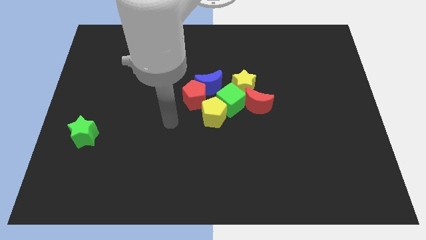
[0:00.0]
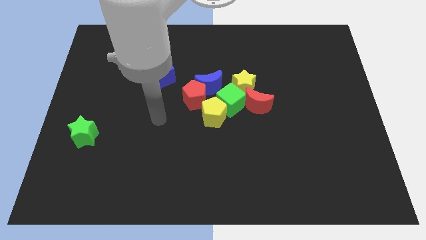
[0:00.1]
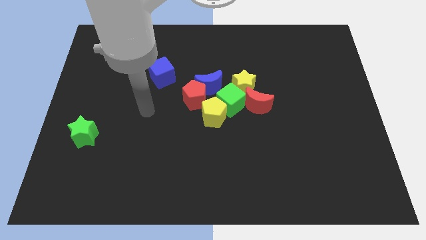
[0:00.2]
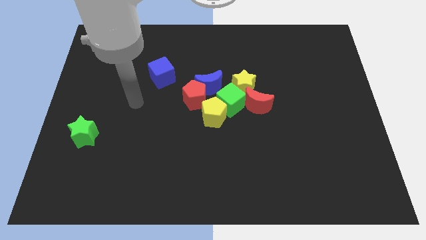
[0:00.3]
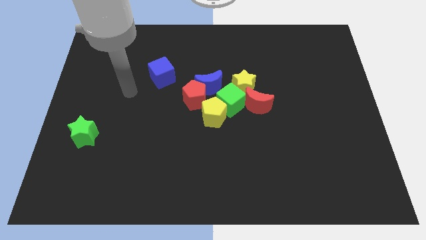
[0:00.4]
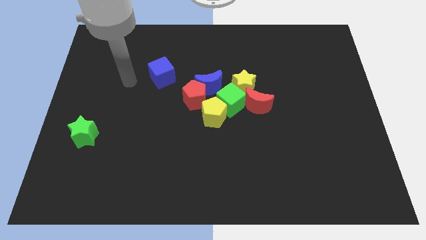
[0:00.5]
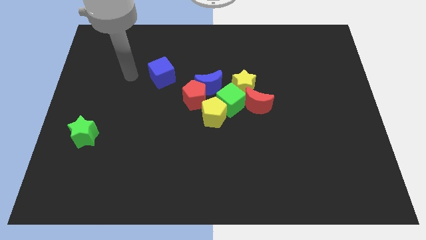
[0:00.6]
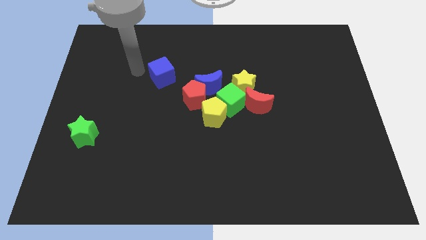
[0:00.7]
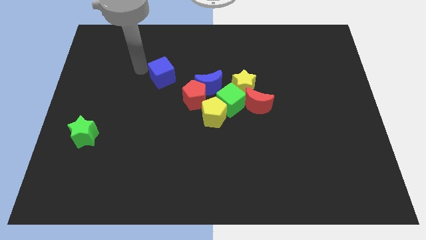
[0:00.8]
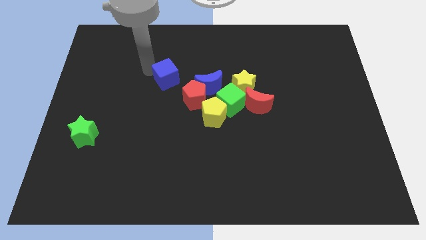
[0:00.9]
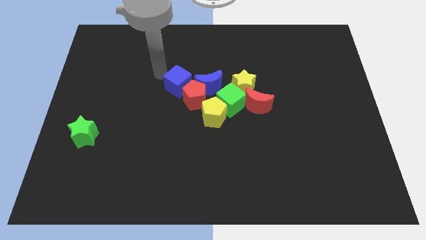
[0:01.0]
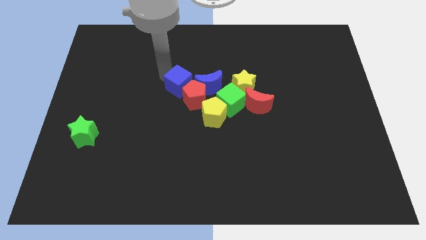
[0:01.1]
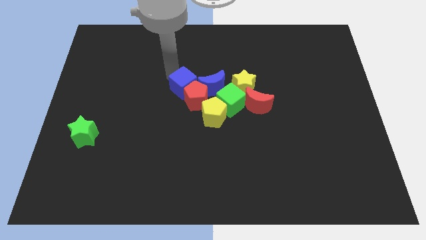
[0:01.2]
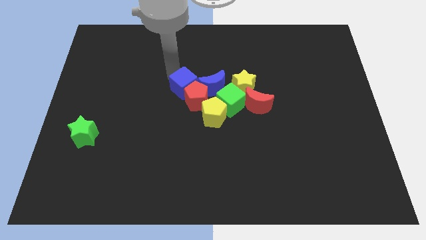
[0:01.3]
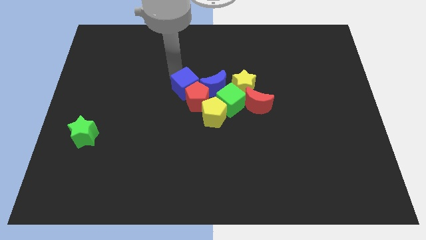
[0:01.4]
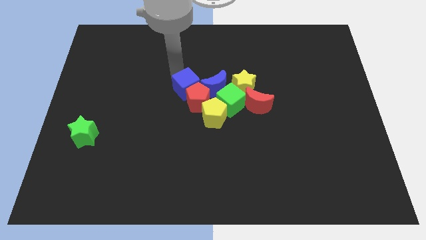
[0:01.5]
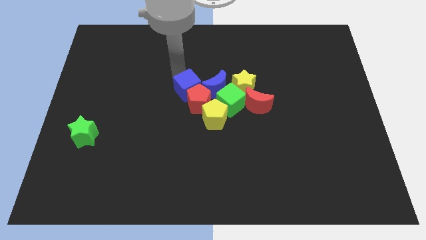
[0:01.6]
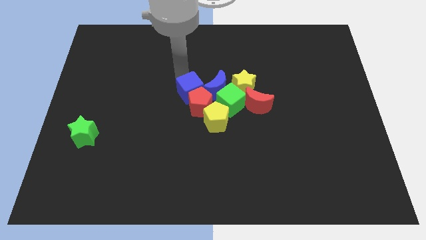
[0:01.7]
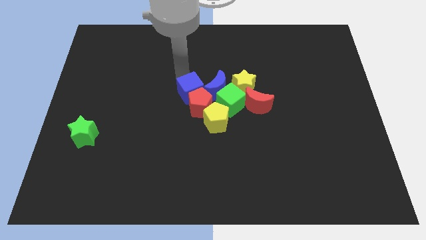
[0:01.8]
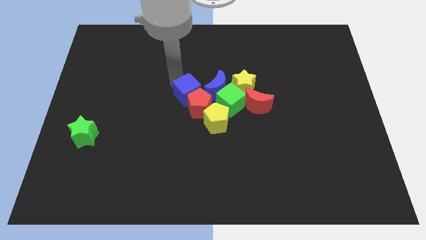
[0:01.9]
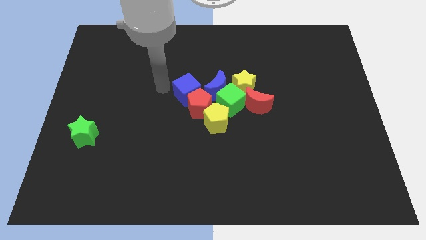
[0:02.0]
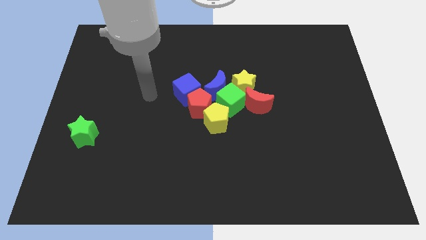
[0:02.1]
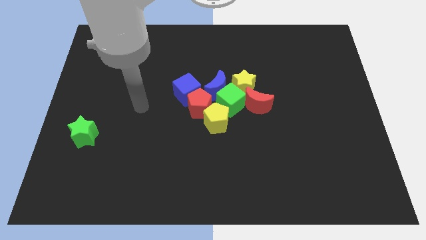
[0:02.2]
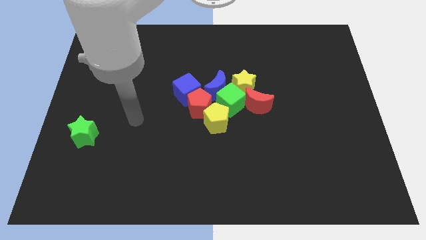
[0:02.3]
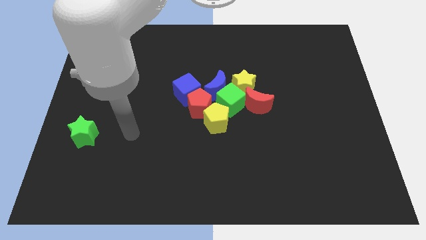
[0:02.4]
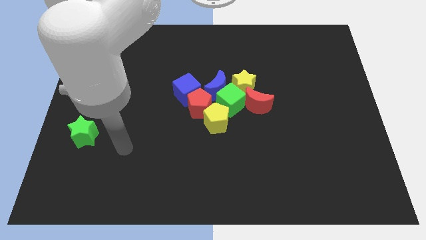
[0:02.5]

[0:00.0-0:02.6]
move the blue cube into the red pentagon

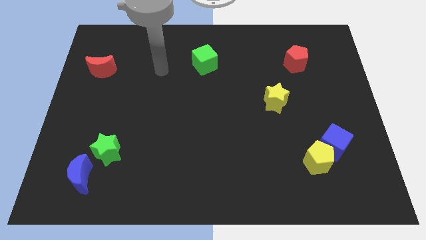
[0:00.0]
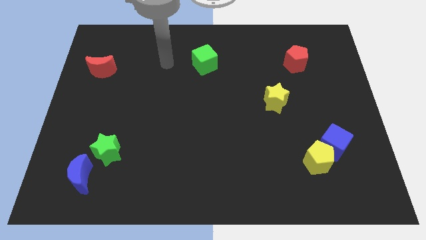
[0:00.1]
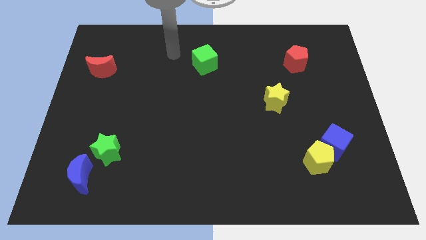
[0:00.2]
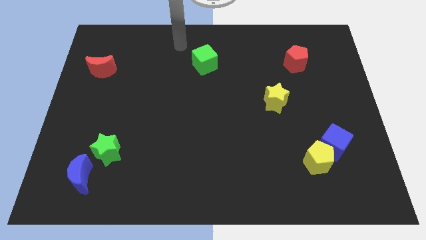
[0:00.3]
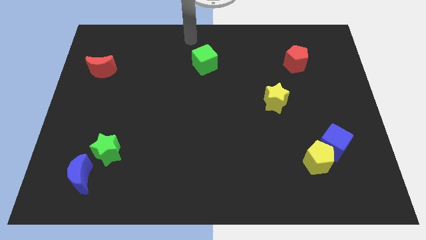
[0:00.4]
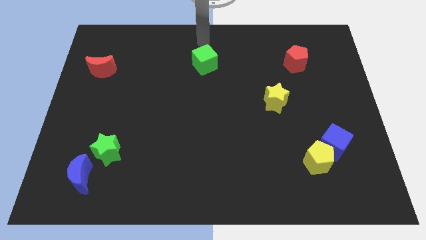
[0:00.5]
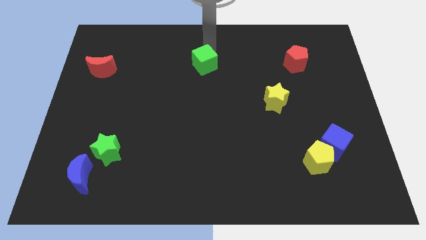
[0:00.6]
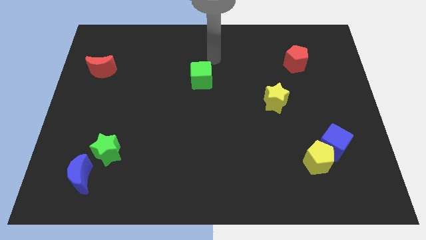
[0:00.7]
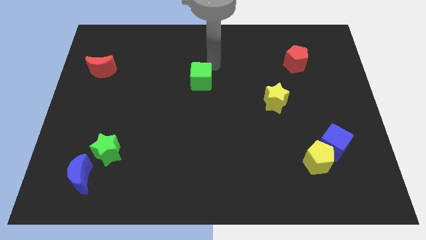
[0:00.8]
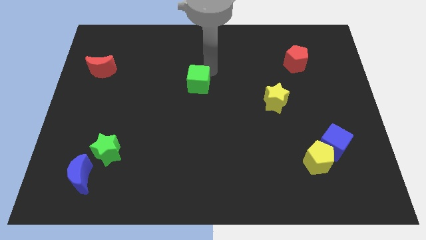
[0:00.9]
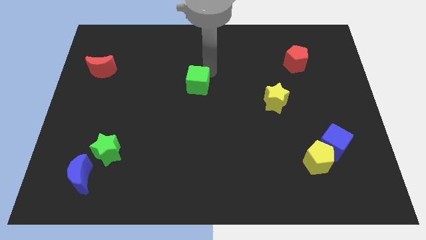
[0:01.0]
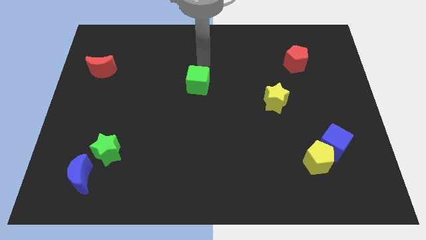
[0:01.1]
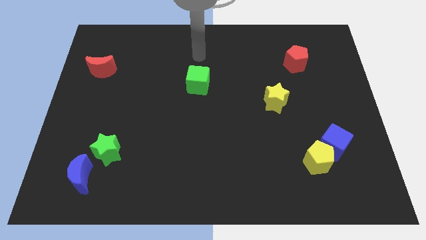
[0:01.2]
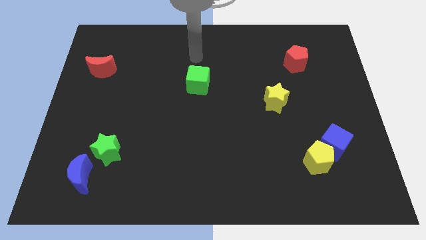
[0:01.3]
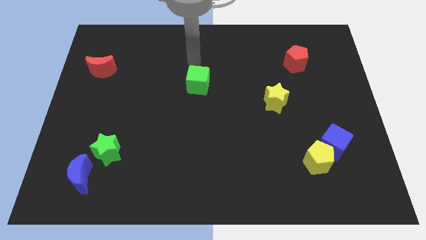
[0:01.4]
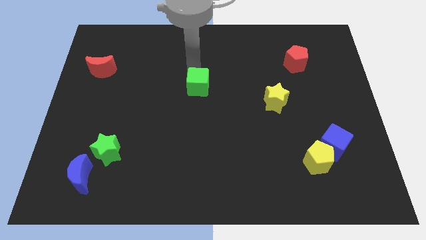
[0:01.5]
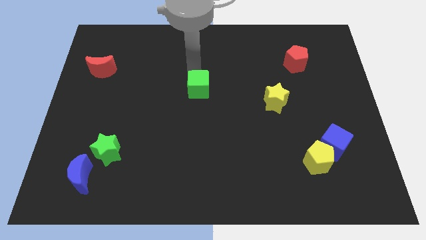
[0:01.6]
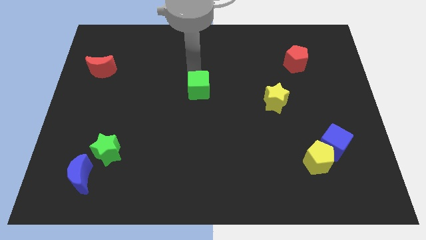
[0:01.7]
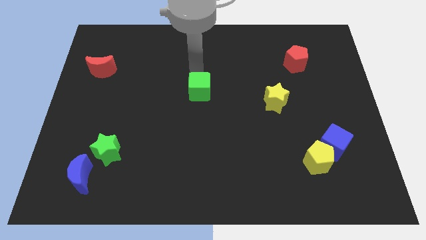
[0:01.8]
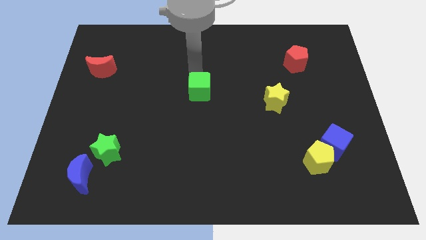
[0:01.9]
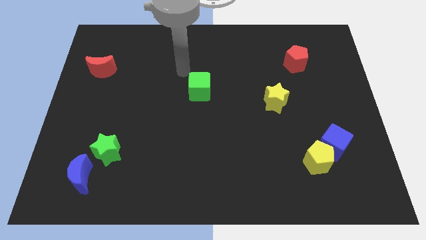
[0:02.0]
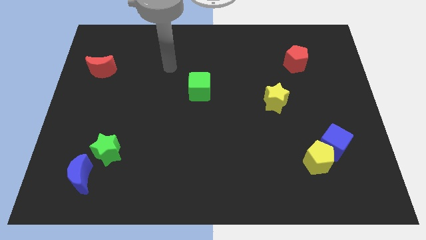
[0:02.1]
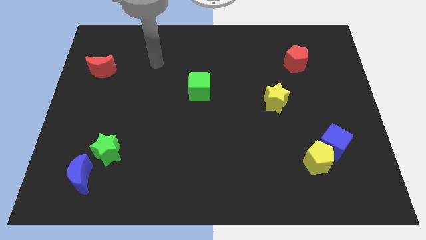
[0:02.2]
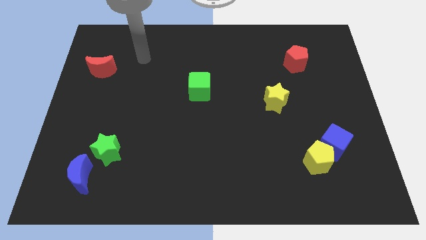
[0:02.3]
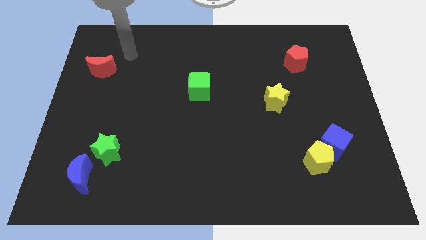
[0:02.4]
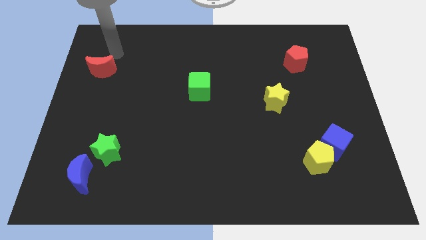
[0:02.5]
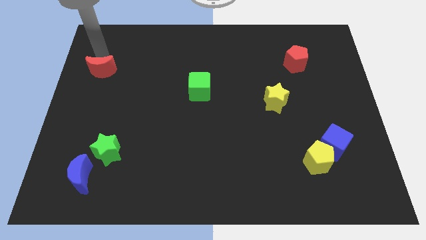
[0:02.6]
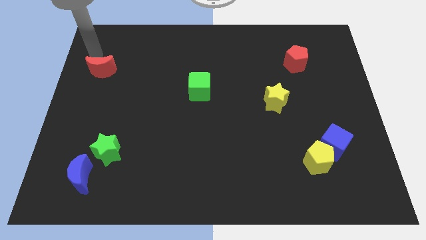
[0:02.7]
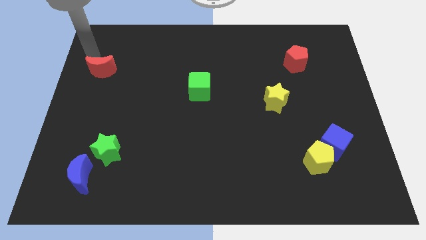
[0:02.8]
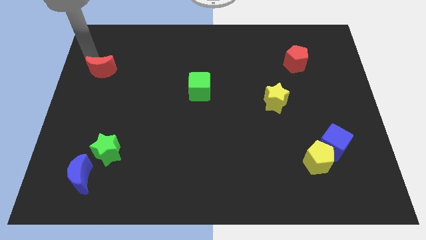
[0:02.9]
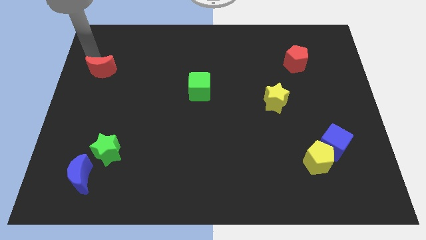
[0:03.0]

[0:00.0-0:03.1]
push the green cube between the red moon and yellow star

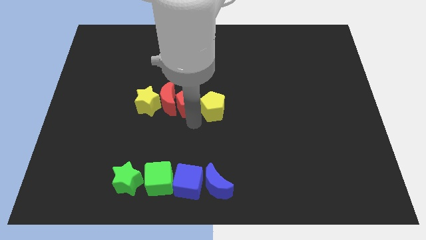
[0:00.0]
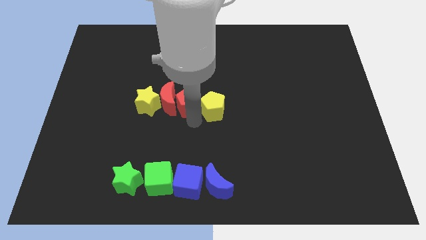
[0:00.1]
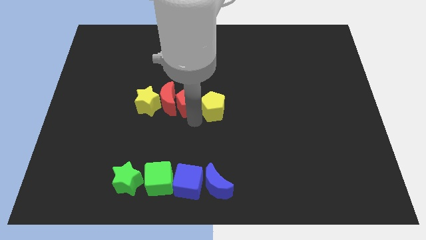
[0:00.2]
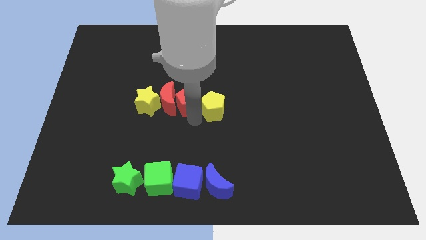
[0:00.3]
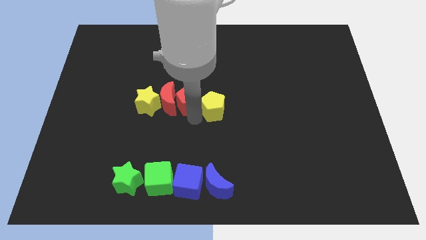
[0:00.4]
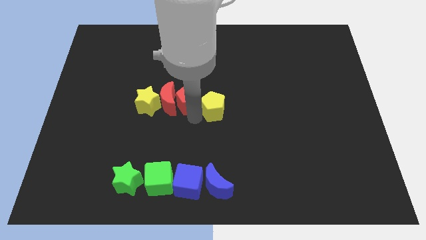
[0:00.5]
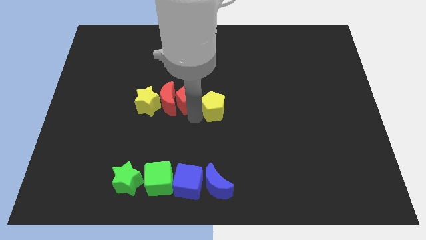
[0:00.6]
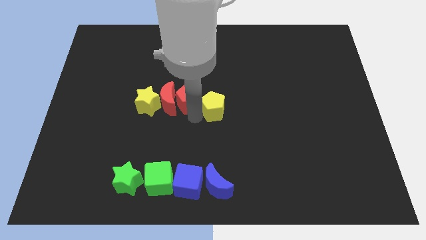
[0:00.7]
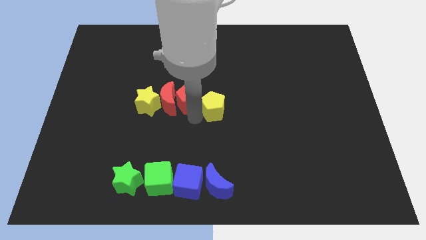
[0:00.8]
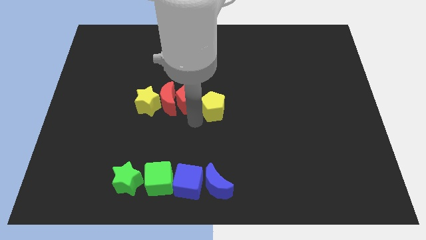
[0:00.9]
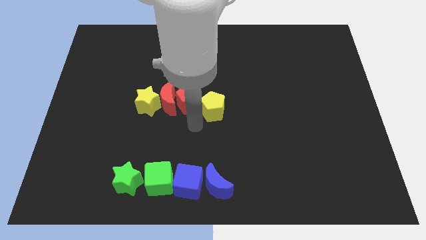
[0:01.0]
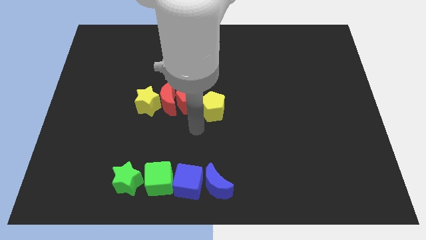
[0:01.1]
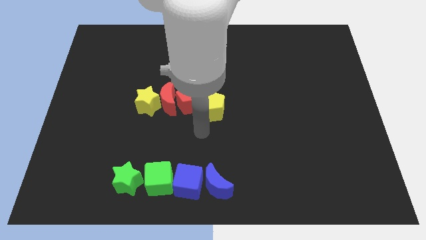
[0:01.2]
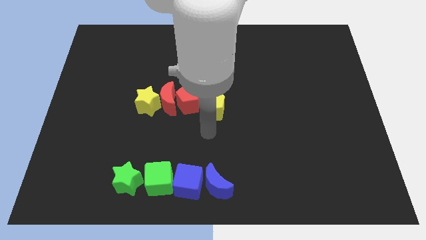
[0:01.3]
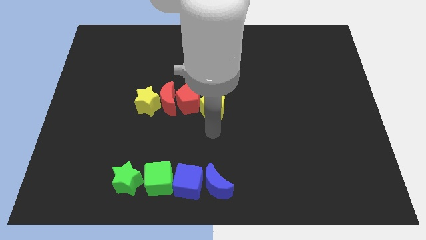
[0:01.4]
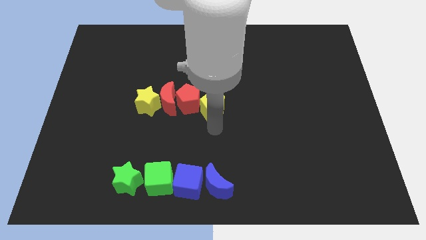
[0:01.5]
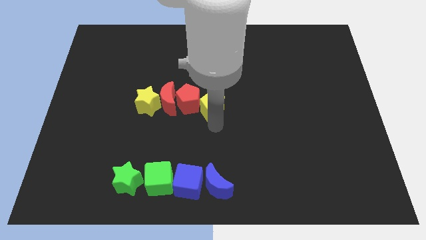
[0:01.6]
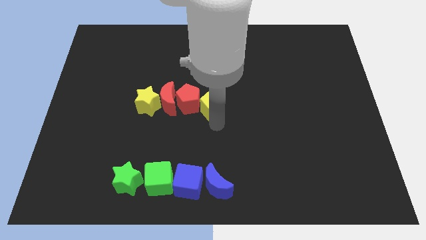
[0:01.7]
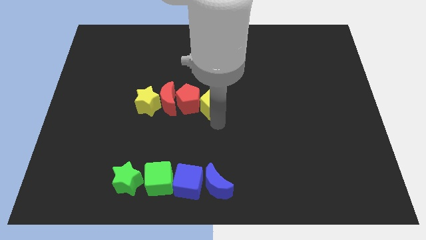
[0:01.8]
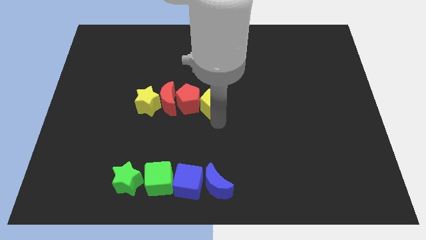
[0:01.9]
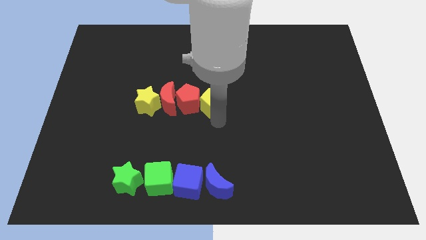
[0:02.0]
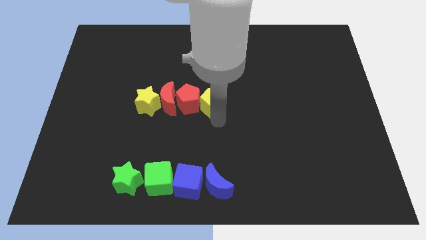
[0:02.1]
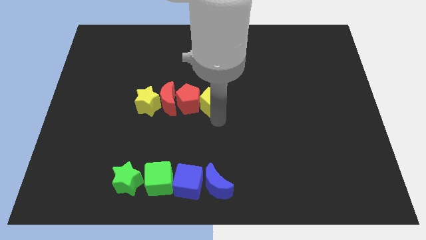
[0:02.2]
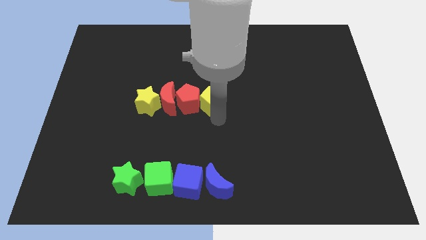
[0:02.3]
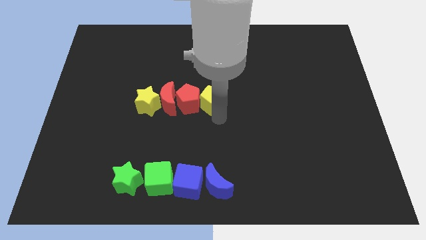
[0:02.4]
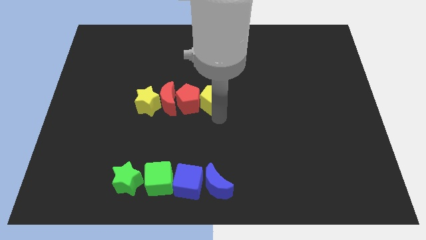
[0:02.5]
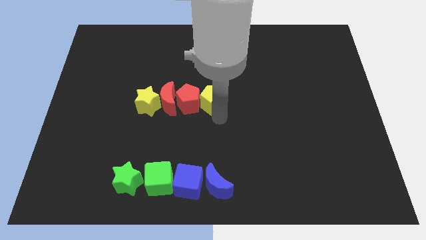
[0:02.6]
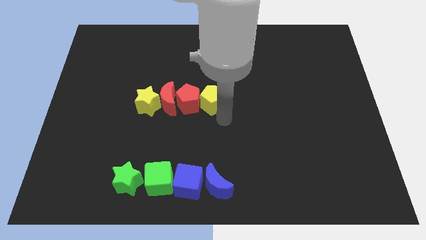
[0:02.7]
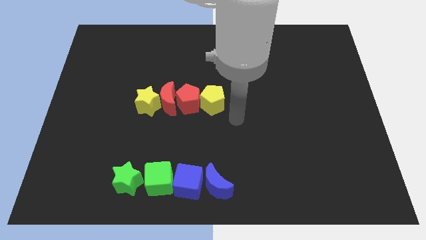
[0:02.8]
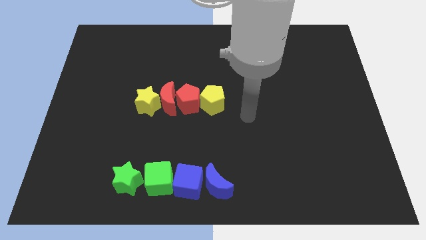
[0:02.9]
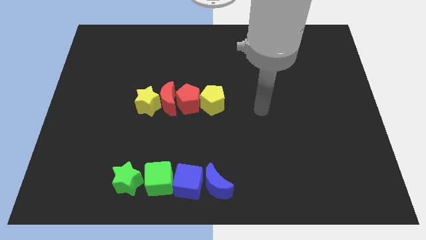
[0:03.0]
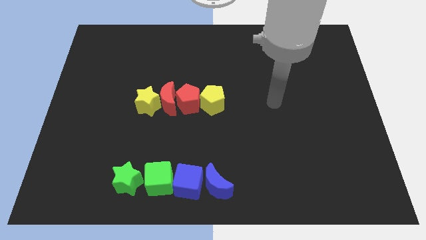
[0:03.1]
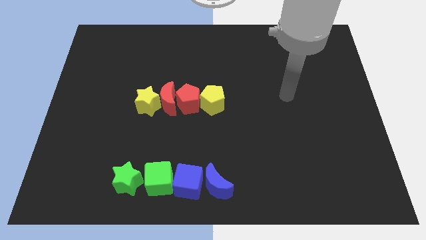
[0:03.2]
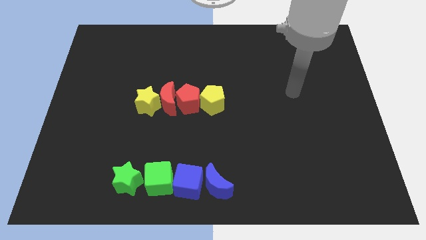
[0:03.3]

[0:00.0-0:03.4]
adjust both the pentagons to form a horizontal line with the red crescent and yellow star
